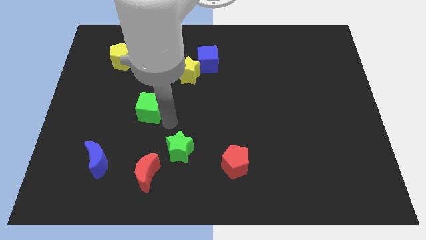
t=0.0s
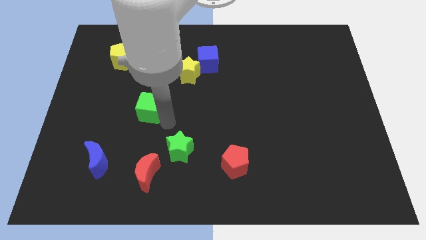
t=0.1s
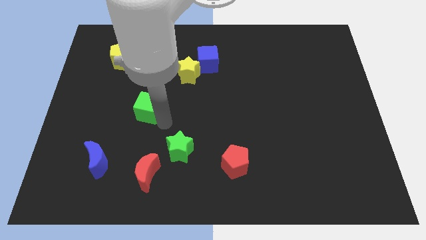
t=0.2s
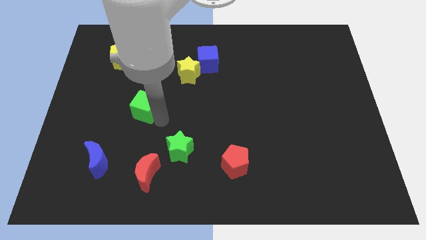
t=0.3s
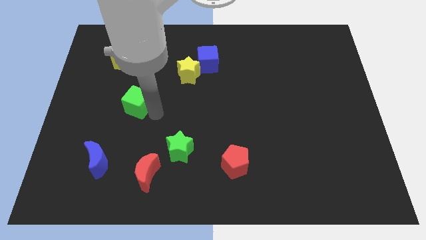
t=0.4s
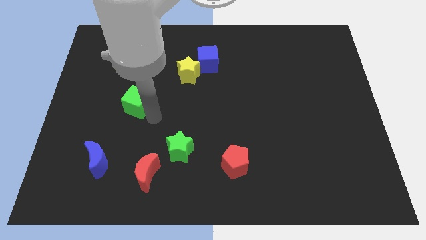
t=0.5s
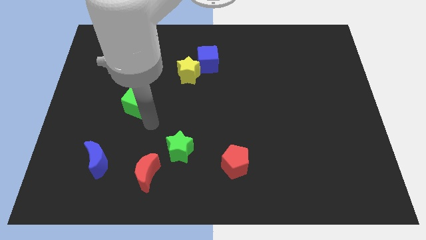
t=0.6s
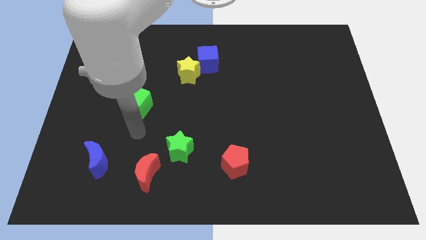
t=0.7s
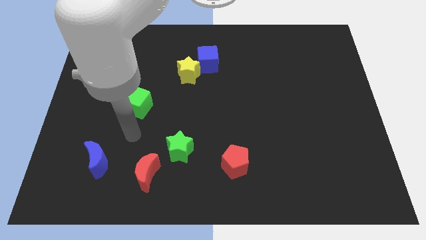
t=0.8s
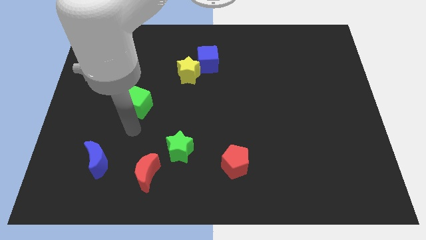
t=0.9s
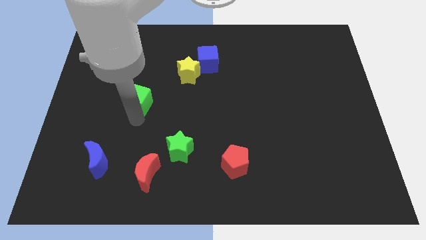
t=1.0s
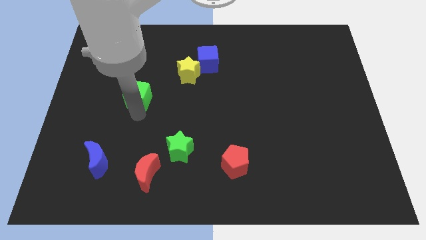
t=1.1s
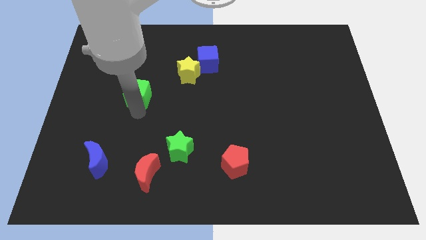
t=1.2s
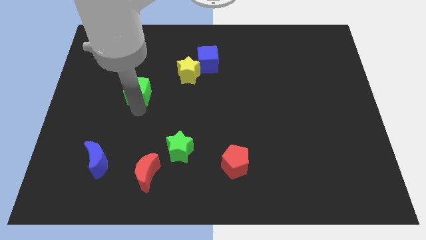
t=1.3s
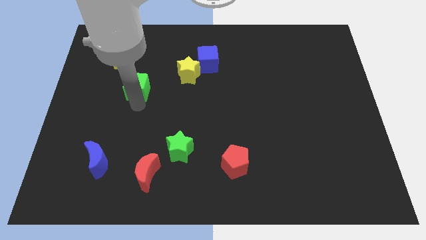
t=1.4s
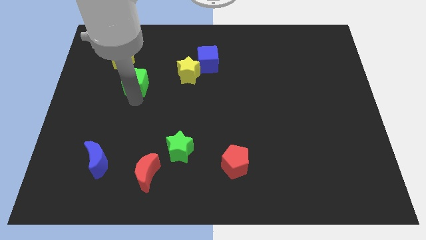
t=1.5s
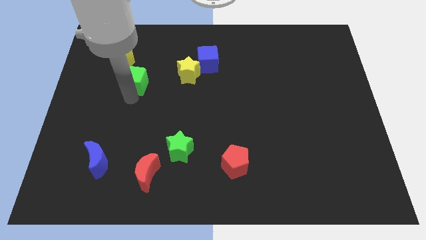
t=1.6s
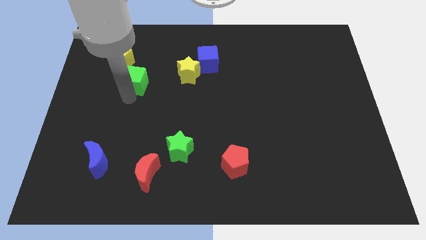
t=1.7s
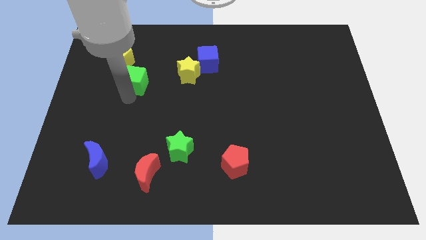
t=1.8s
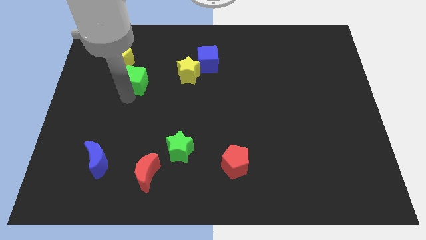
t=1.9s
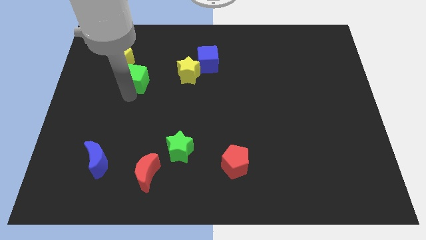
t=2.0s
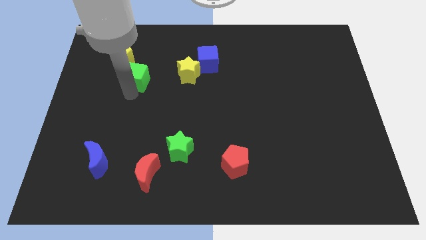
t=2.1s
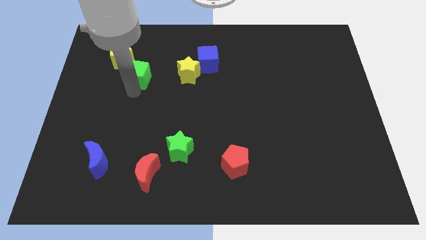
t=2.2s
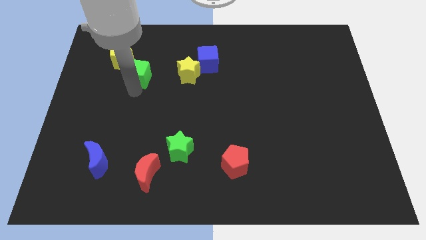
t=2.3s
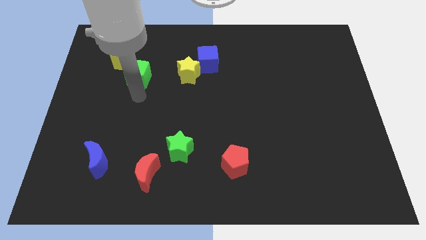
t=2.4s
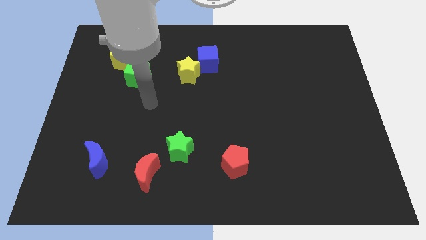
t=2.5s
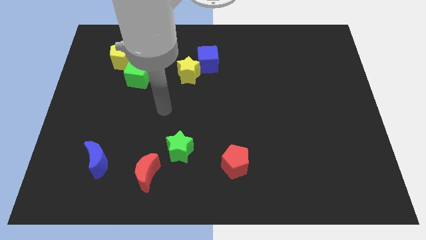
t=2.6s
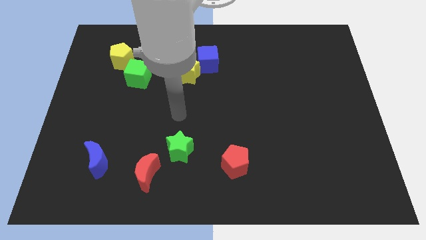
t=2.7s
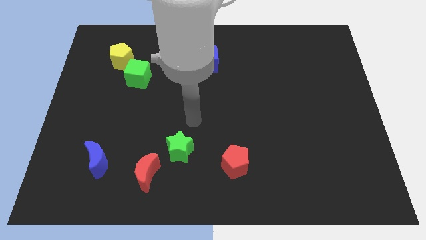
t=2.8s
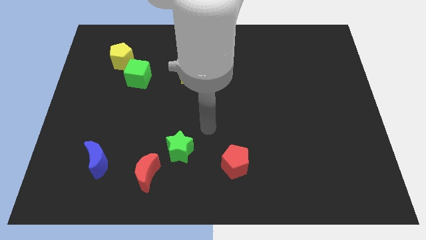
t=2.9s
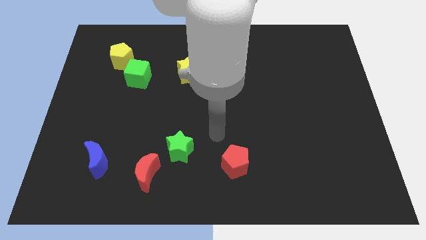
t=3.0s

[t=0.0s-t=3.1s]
place the green cube diagonally at the bottom right side of the yellow pentagon

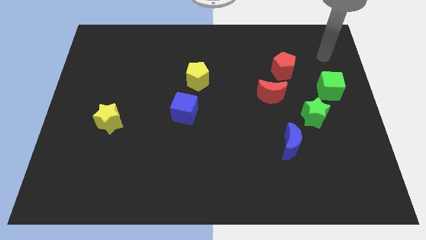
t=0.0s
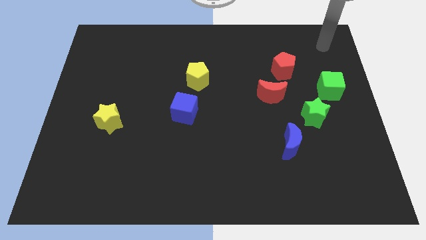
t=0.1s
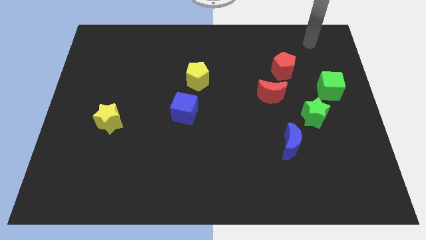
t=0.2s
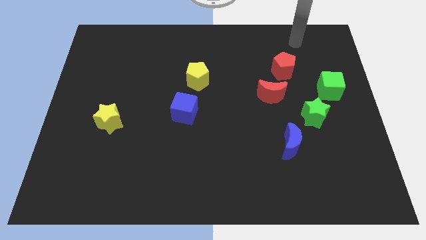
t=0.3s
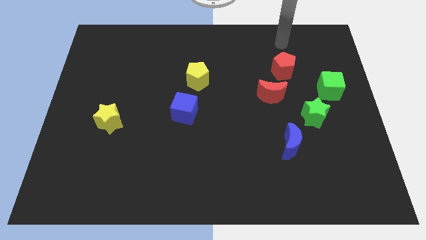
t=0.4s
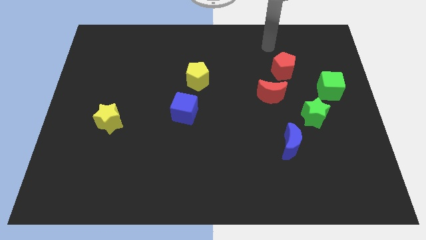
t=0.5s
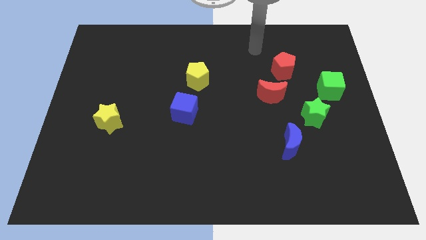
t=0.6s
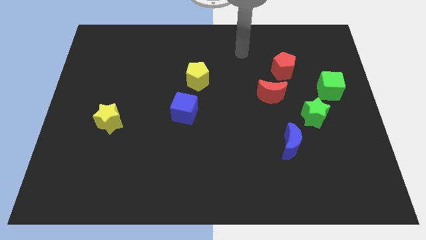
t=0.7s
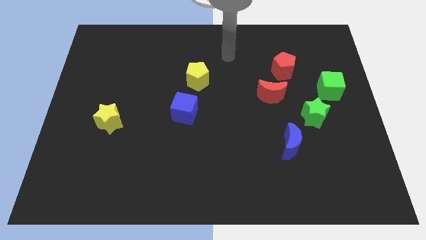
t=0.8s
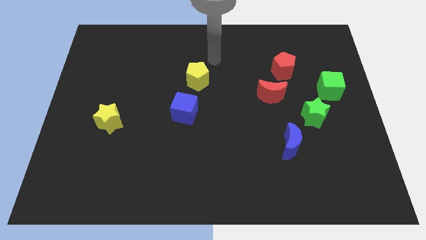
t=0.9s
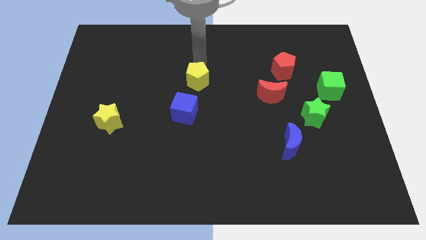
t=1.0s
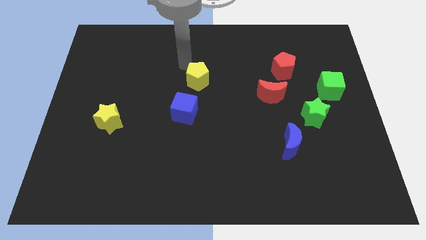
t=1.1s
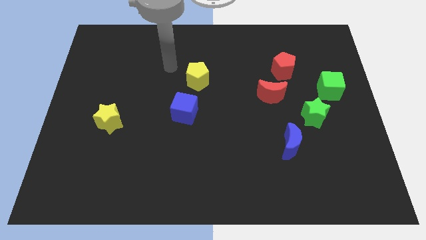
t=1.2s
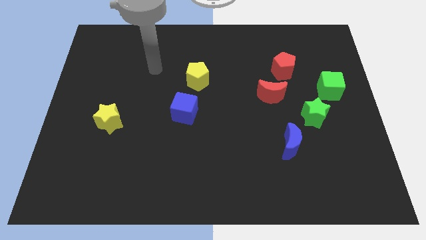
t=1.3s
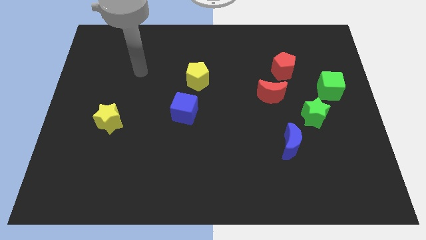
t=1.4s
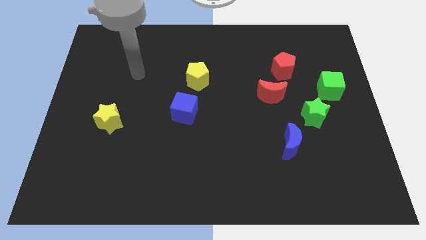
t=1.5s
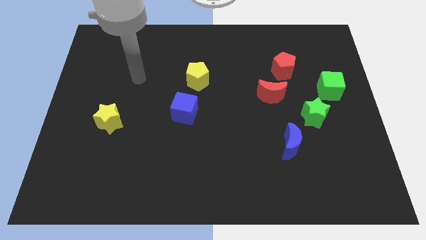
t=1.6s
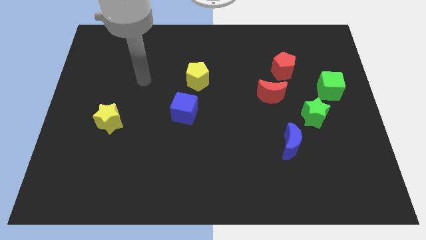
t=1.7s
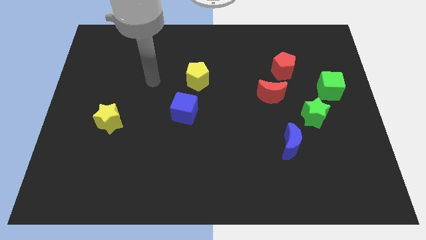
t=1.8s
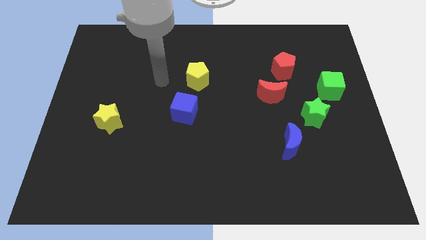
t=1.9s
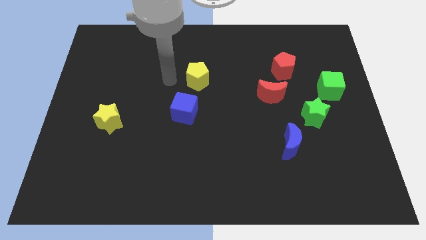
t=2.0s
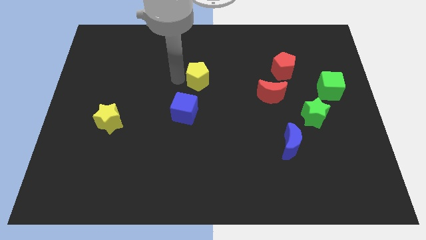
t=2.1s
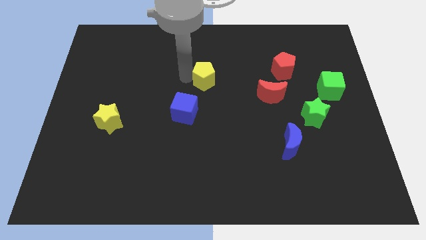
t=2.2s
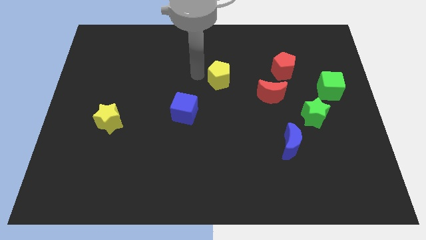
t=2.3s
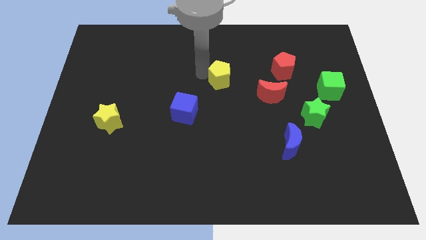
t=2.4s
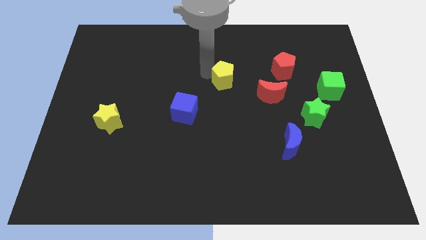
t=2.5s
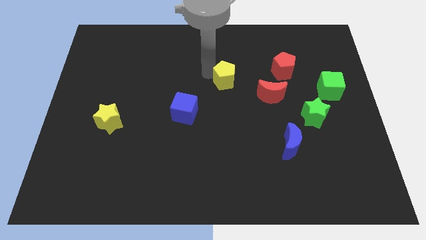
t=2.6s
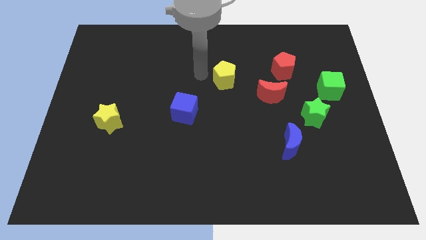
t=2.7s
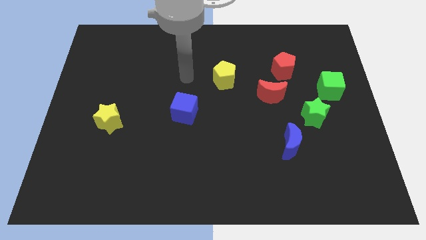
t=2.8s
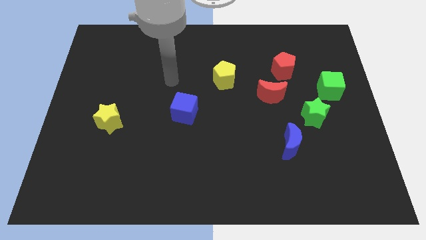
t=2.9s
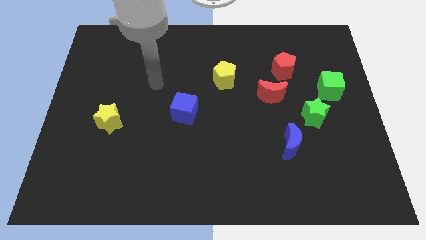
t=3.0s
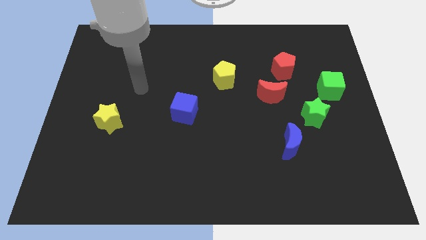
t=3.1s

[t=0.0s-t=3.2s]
move the yellow pentagon diagonally on the top left side of the red crescent

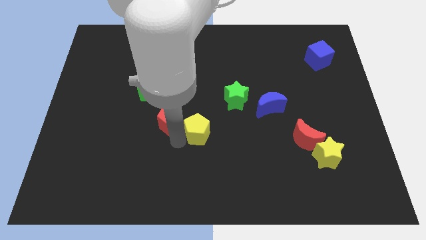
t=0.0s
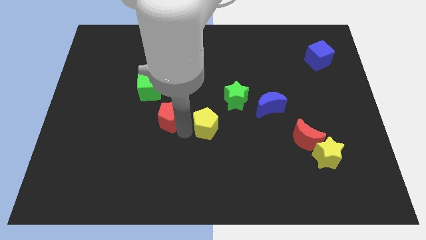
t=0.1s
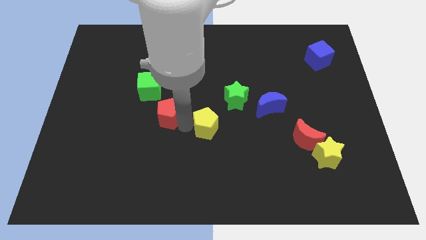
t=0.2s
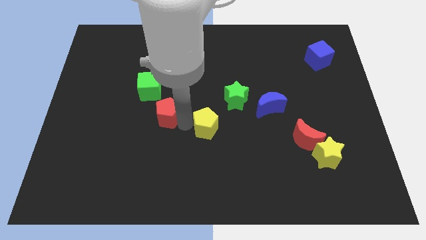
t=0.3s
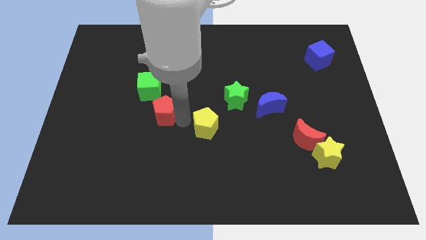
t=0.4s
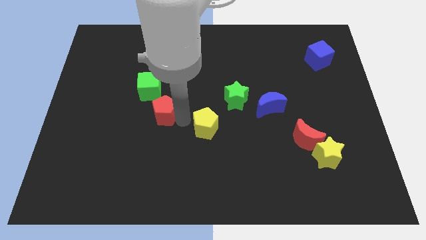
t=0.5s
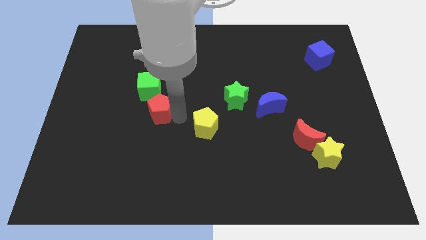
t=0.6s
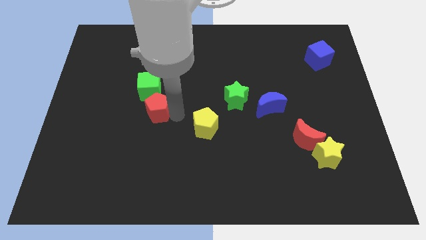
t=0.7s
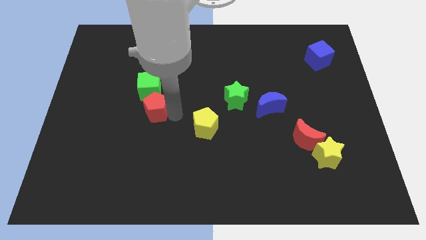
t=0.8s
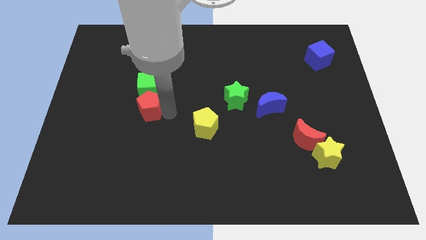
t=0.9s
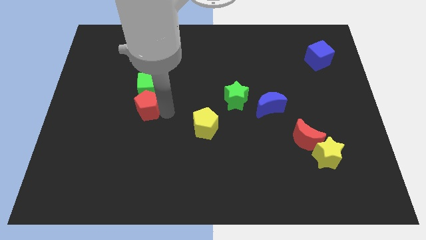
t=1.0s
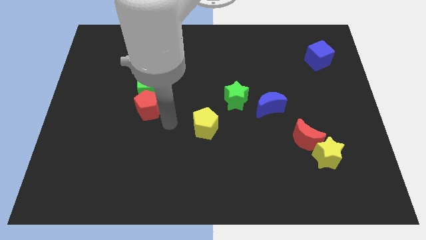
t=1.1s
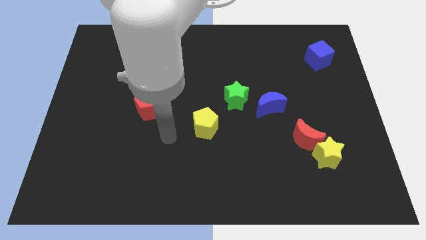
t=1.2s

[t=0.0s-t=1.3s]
move the red pentagon to the bottom side of the green cube

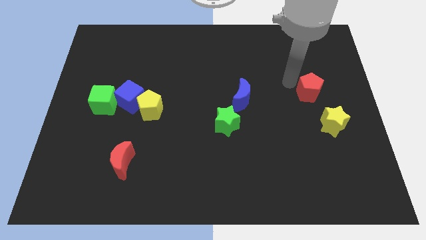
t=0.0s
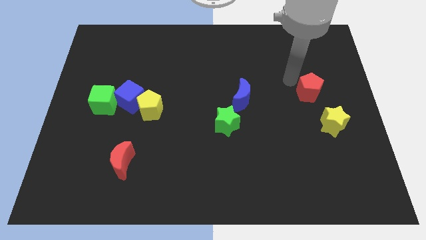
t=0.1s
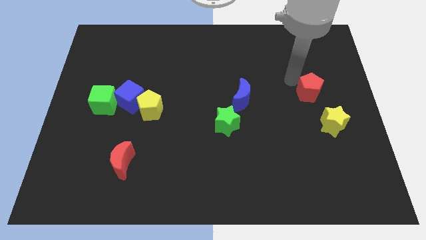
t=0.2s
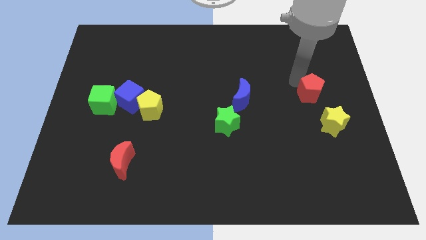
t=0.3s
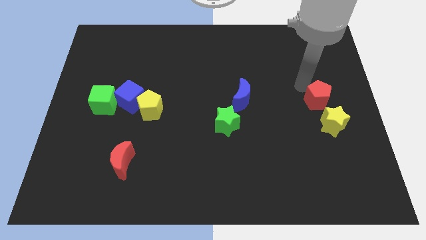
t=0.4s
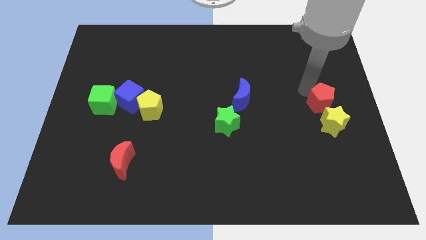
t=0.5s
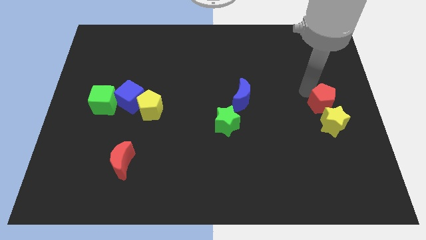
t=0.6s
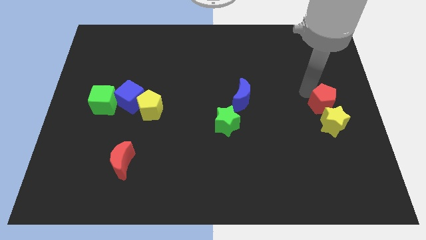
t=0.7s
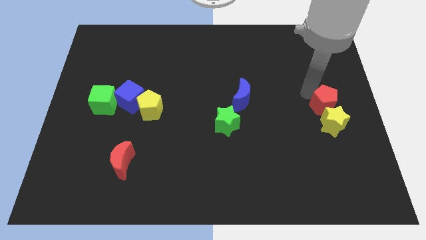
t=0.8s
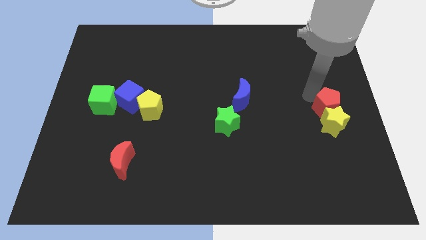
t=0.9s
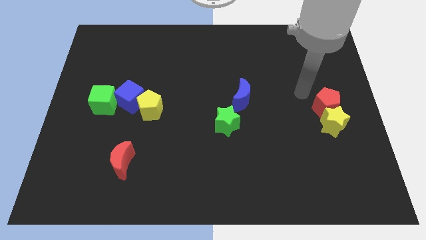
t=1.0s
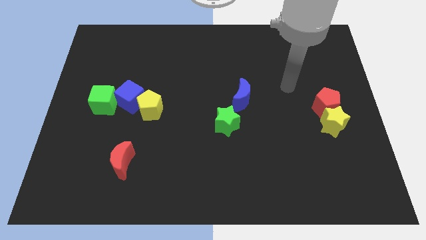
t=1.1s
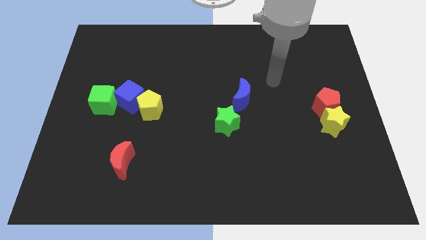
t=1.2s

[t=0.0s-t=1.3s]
move the red pentagon into the yellow star

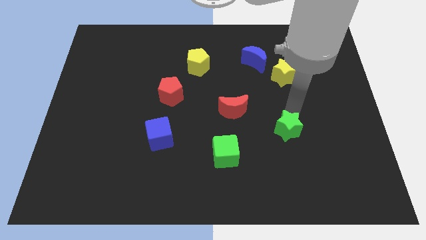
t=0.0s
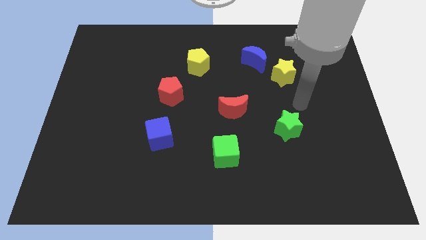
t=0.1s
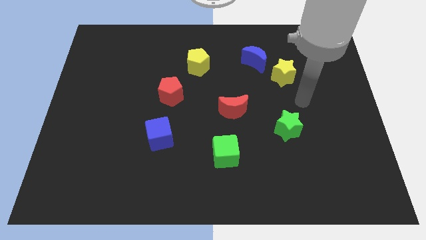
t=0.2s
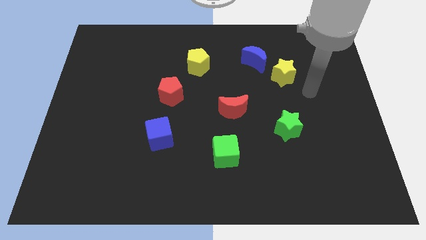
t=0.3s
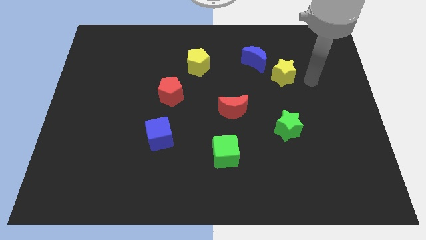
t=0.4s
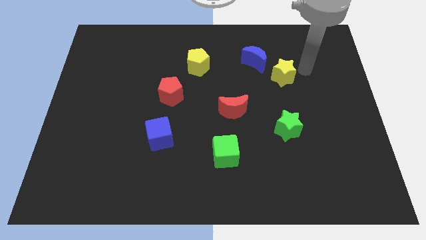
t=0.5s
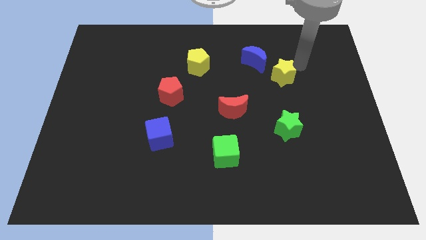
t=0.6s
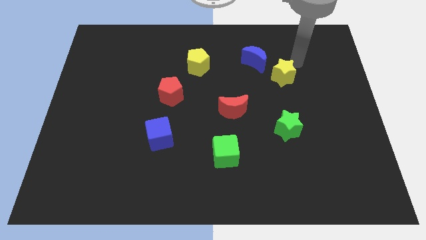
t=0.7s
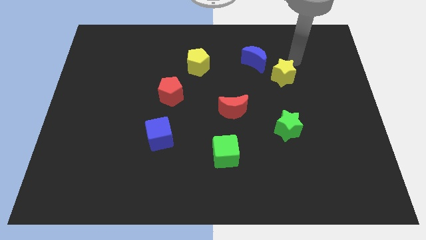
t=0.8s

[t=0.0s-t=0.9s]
place your arm to the top of yellow star
